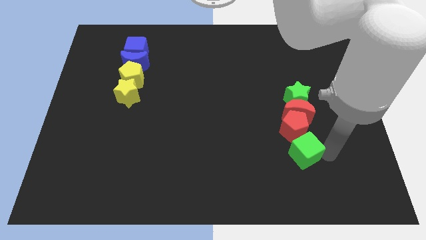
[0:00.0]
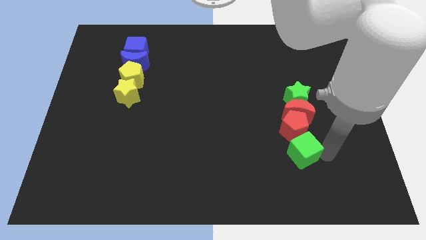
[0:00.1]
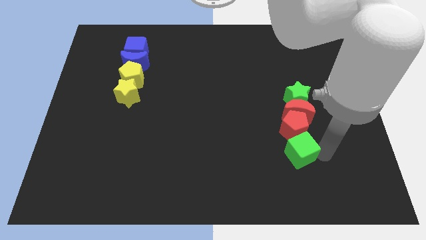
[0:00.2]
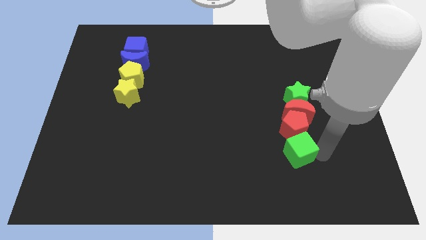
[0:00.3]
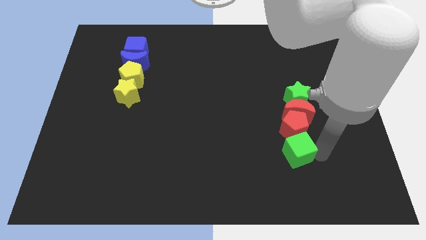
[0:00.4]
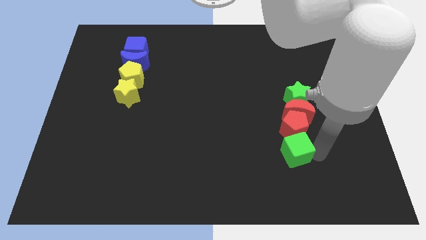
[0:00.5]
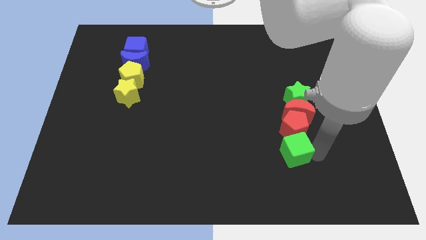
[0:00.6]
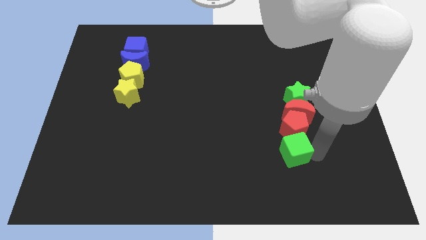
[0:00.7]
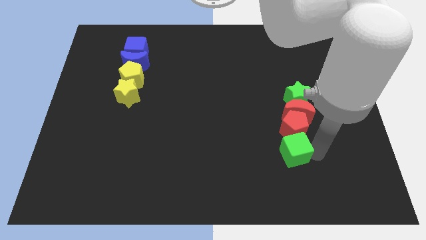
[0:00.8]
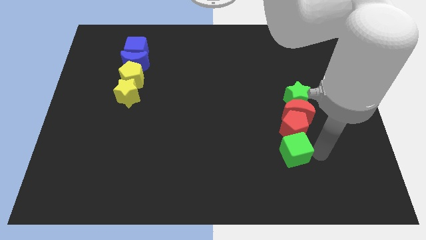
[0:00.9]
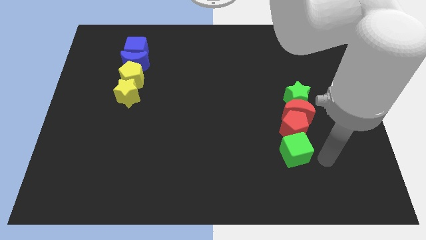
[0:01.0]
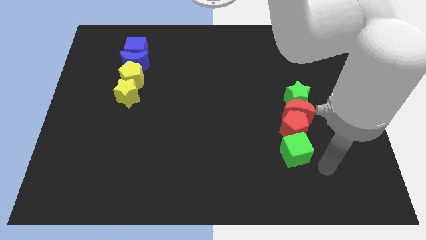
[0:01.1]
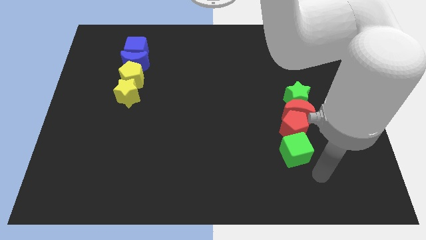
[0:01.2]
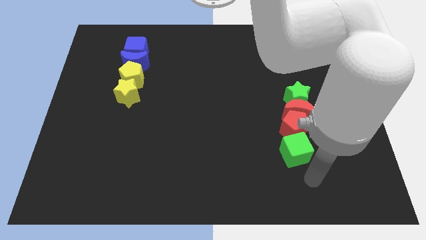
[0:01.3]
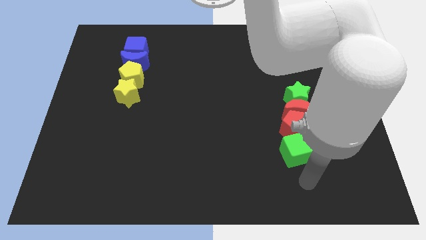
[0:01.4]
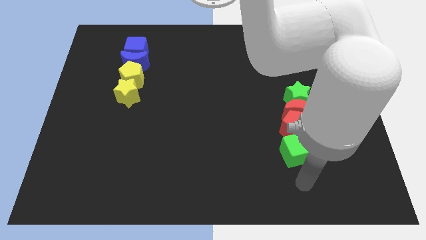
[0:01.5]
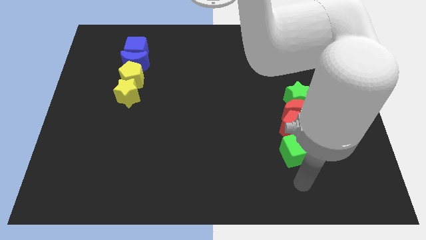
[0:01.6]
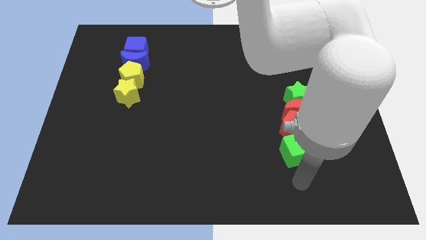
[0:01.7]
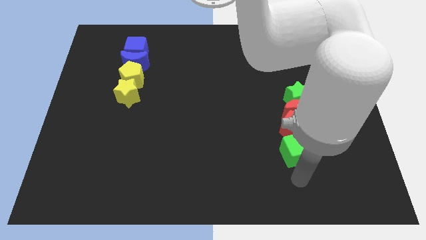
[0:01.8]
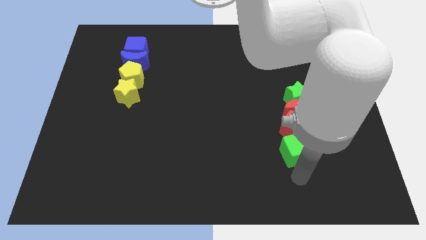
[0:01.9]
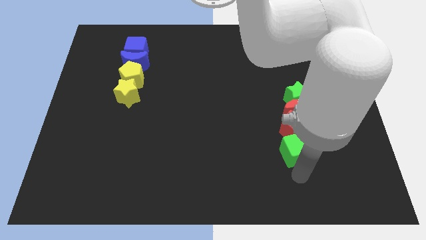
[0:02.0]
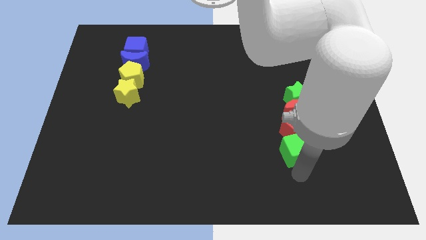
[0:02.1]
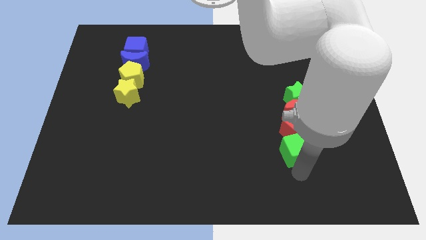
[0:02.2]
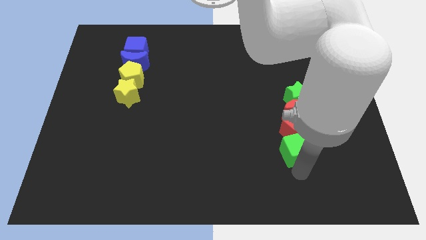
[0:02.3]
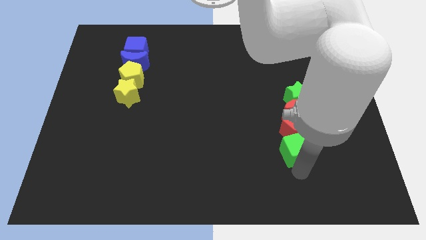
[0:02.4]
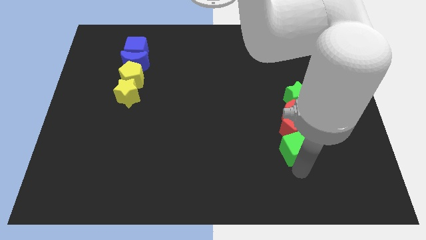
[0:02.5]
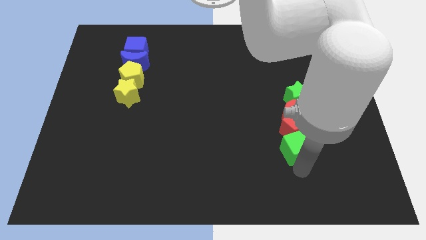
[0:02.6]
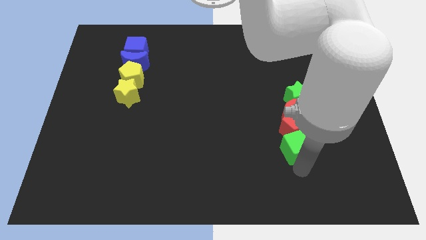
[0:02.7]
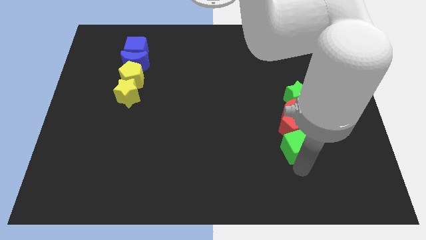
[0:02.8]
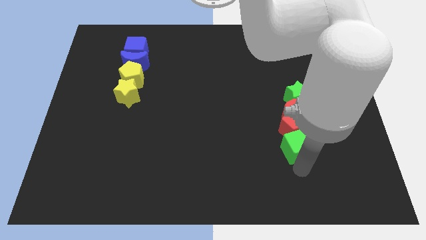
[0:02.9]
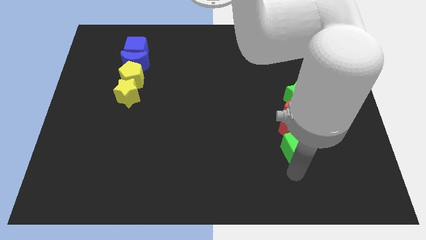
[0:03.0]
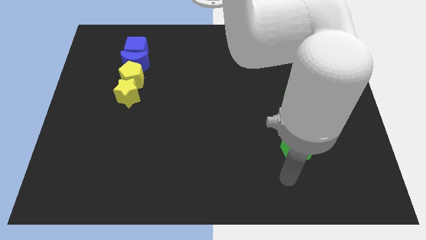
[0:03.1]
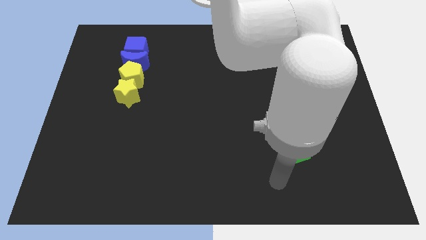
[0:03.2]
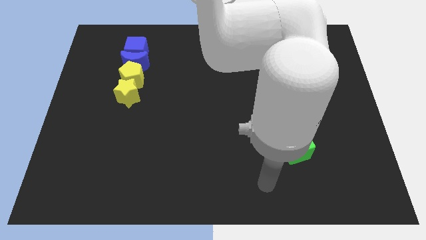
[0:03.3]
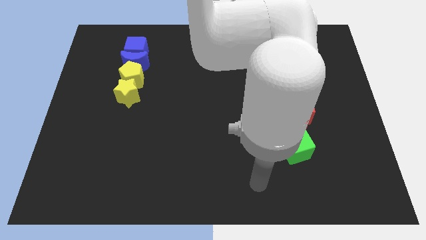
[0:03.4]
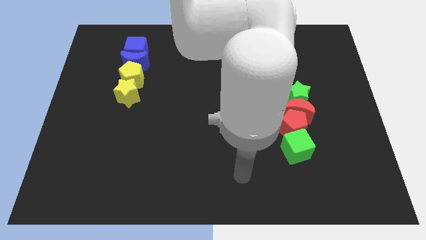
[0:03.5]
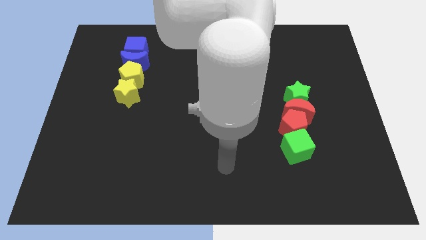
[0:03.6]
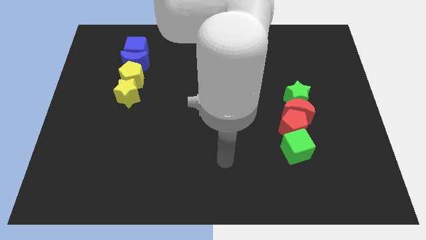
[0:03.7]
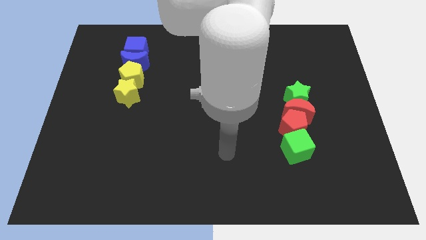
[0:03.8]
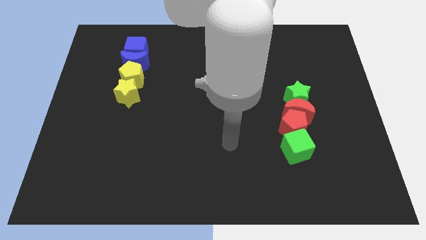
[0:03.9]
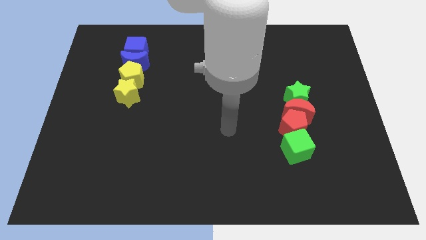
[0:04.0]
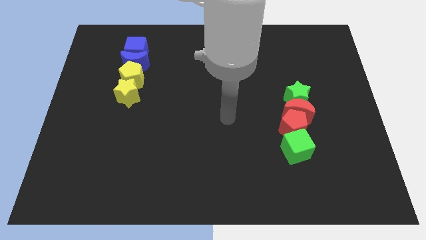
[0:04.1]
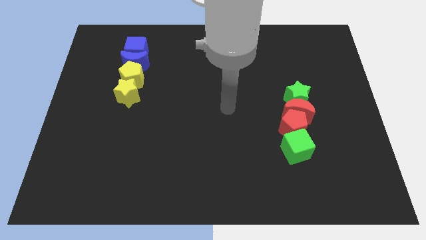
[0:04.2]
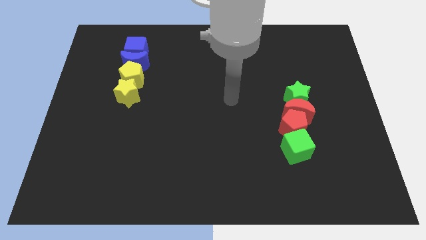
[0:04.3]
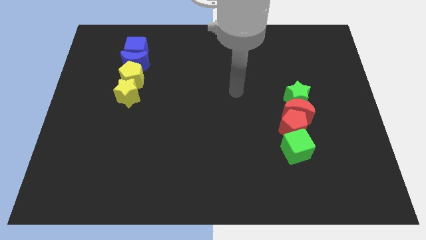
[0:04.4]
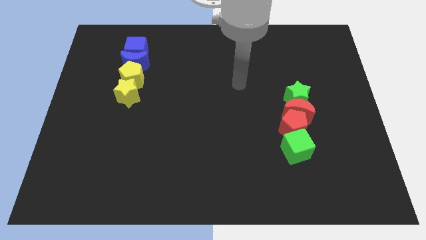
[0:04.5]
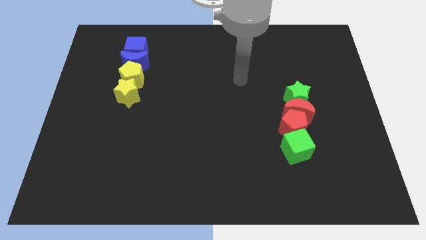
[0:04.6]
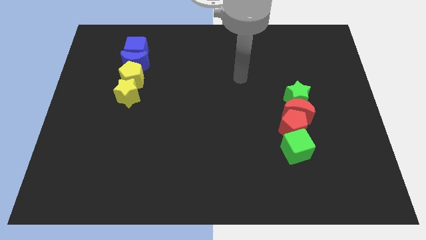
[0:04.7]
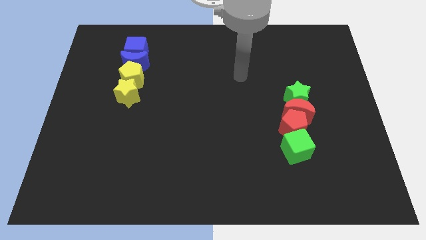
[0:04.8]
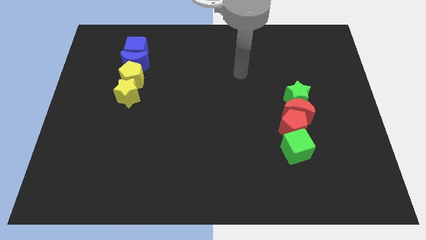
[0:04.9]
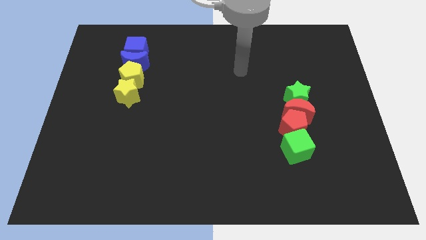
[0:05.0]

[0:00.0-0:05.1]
push the green cube below the red crescent

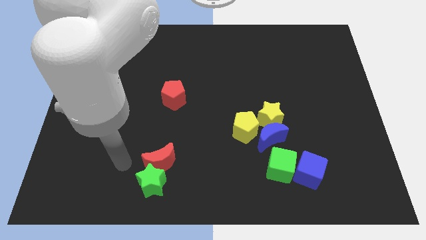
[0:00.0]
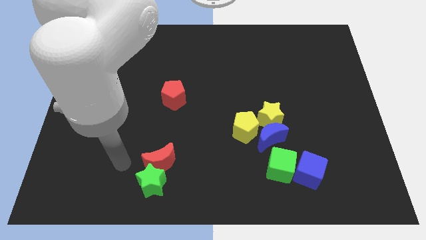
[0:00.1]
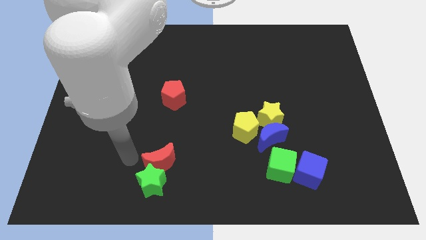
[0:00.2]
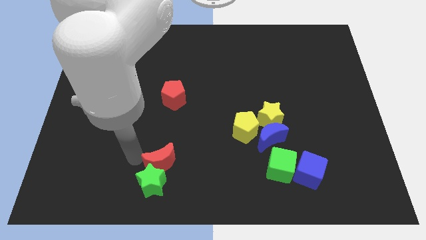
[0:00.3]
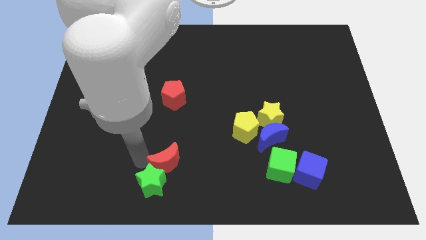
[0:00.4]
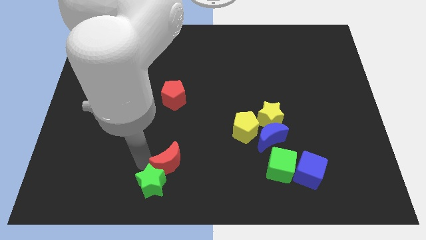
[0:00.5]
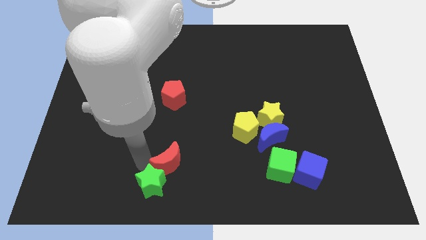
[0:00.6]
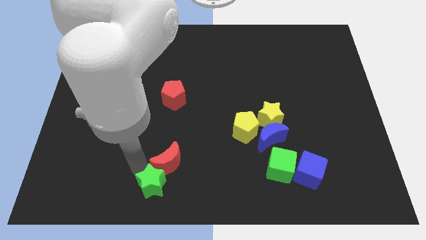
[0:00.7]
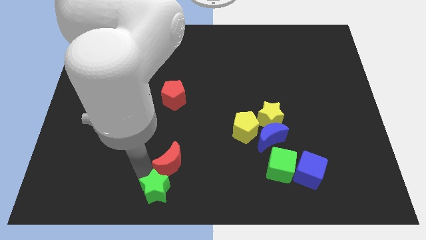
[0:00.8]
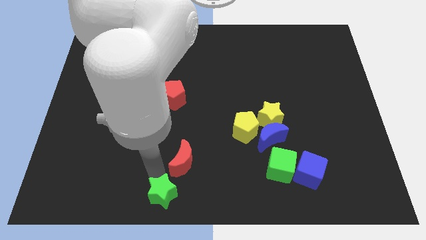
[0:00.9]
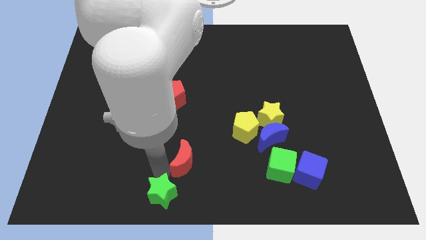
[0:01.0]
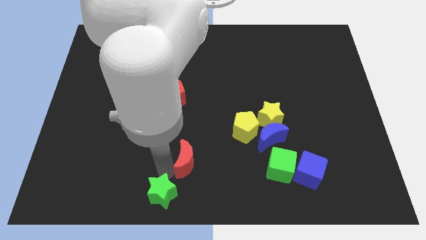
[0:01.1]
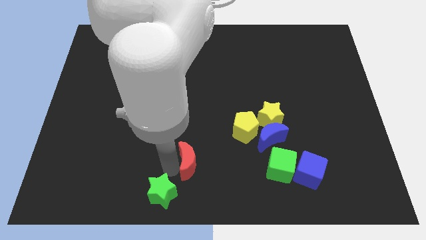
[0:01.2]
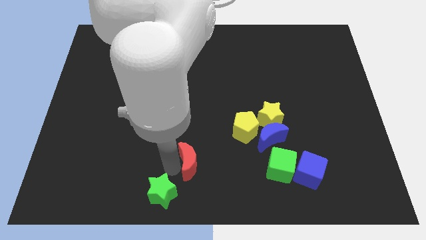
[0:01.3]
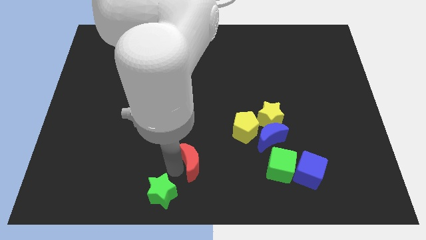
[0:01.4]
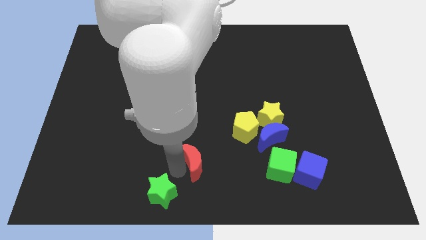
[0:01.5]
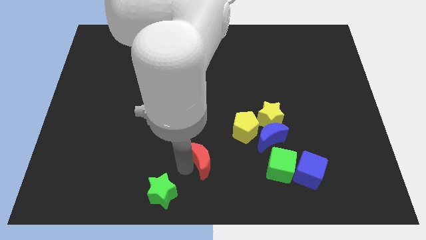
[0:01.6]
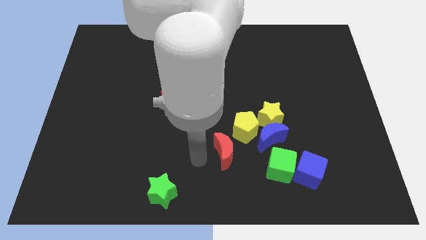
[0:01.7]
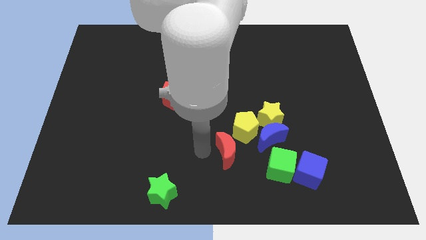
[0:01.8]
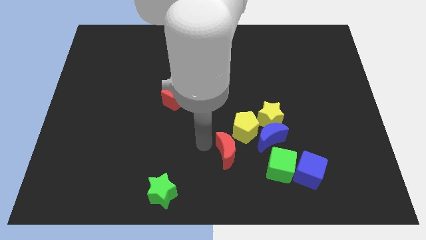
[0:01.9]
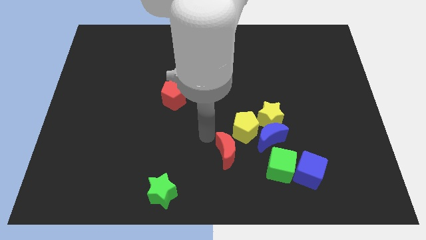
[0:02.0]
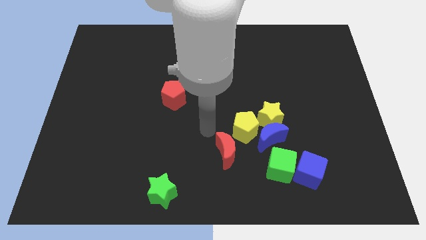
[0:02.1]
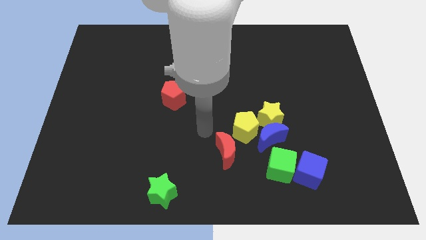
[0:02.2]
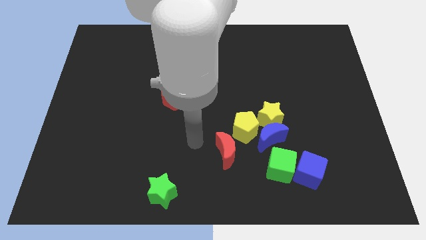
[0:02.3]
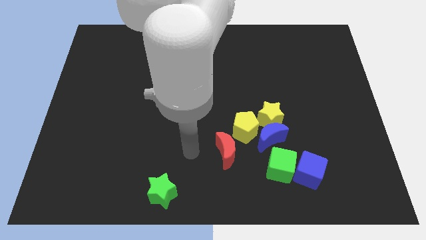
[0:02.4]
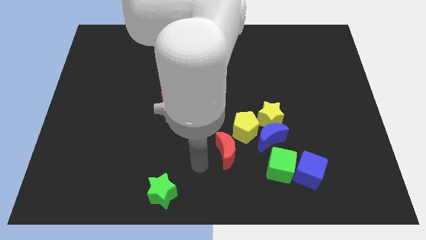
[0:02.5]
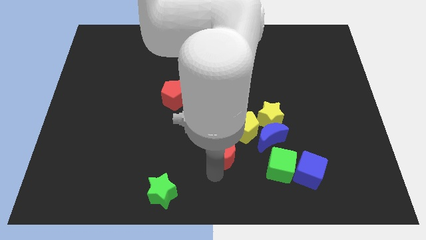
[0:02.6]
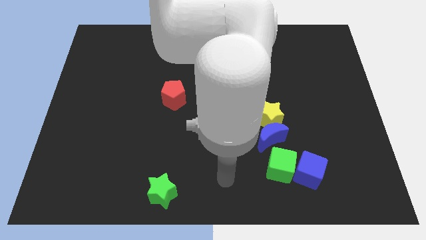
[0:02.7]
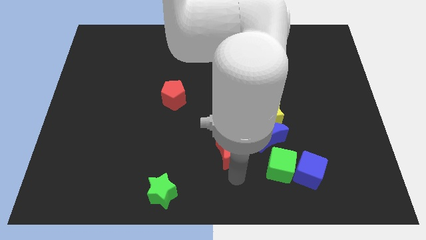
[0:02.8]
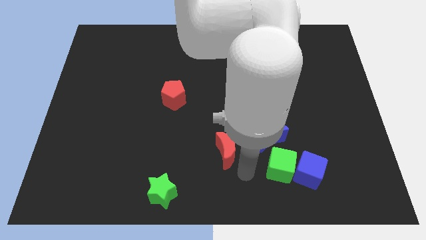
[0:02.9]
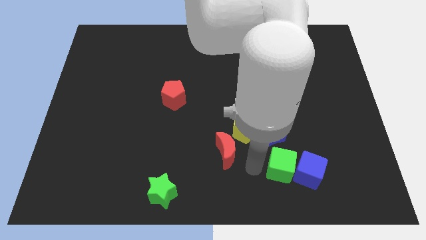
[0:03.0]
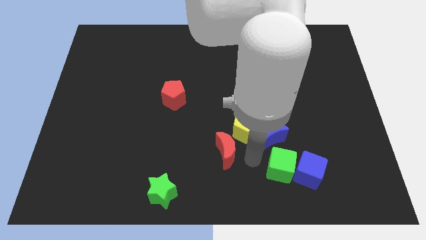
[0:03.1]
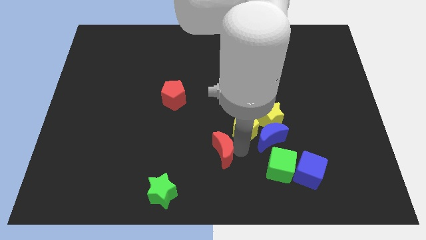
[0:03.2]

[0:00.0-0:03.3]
place the red moon diagonally top right to the green star

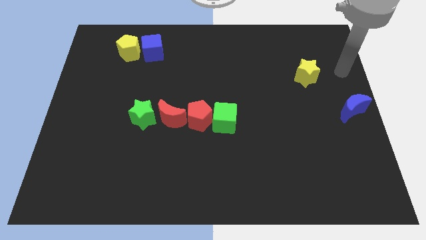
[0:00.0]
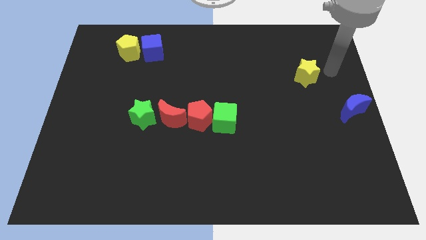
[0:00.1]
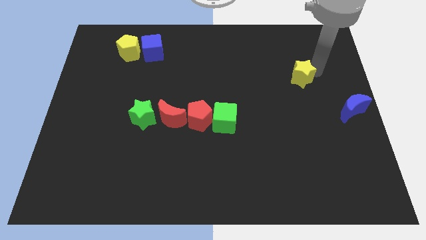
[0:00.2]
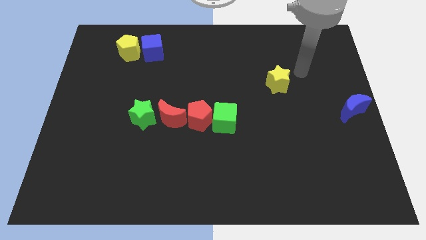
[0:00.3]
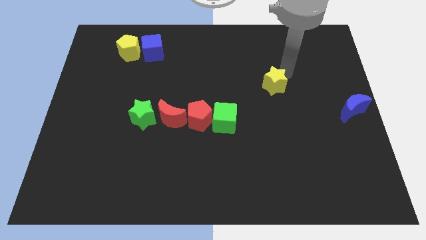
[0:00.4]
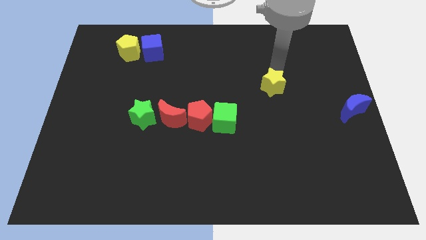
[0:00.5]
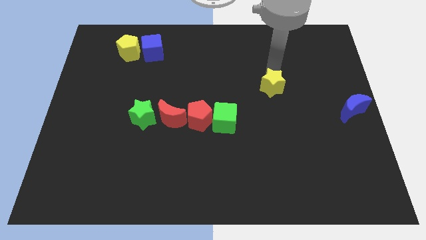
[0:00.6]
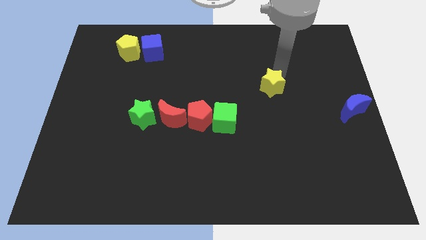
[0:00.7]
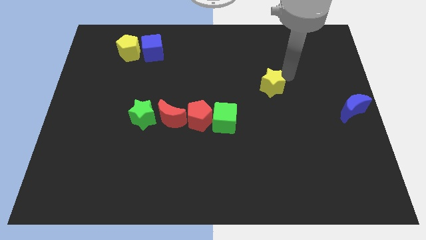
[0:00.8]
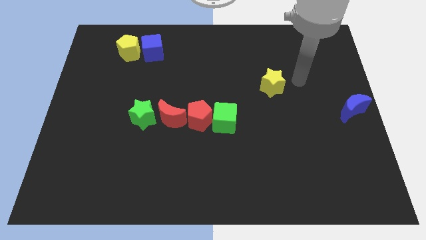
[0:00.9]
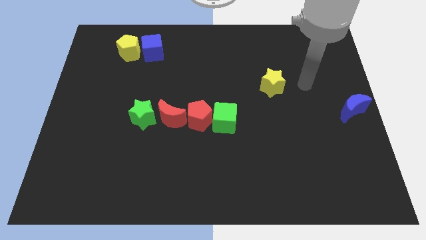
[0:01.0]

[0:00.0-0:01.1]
push the yellow star towards the center
